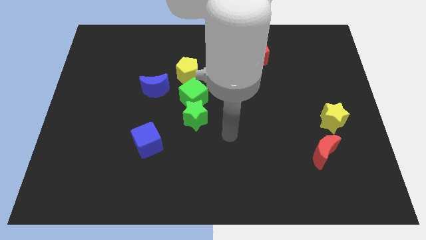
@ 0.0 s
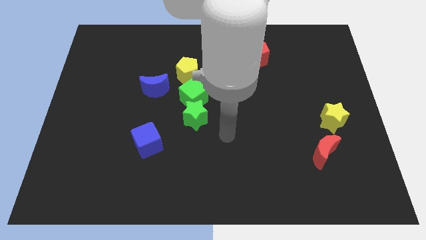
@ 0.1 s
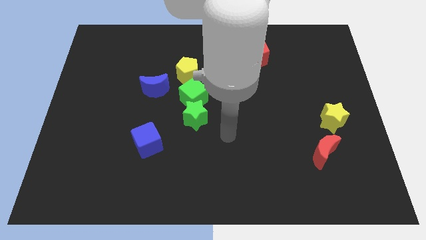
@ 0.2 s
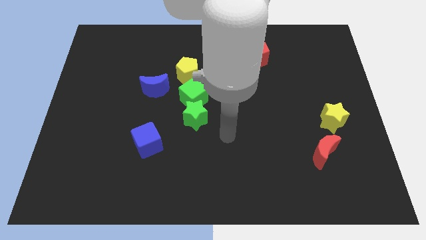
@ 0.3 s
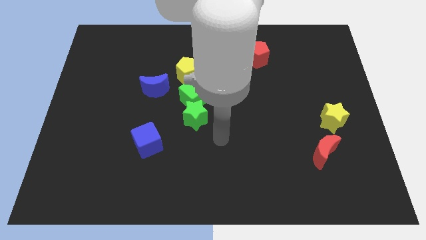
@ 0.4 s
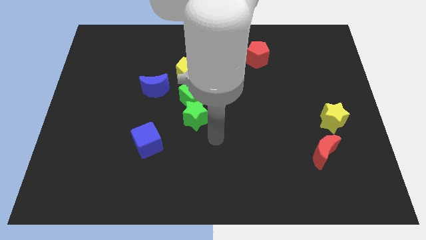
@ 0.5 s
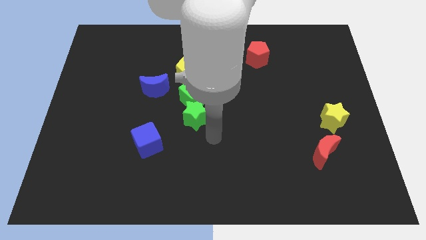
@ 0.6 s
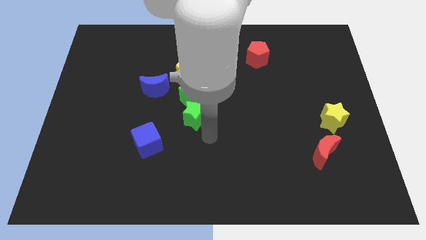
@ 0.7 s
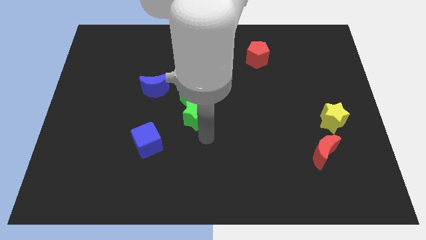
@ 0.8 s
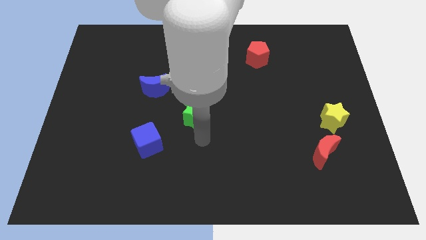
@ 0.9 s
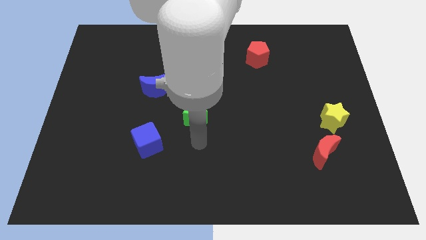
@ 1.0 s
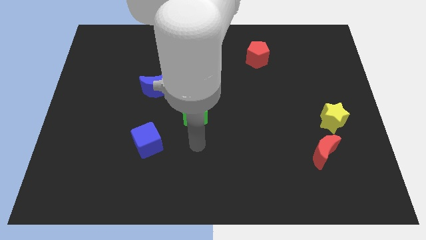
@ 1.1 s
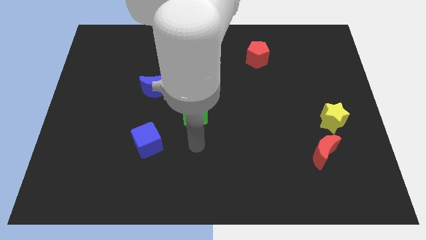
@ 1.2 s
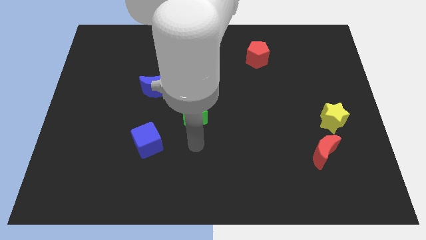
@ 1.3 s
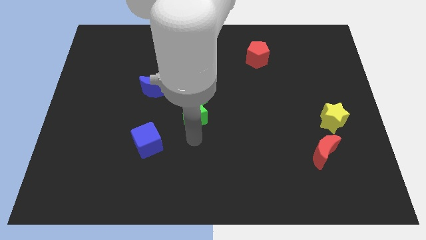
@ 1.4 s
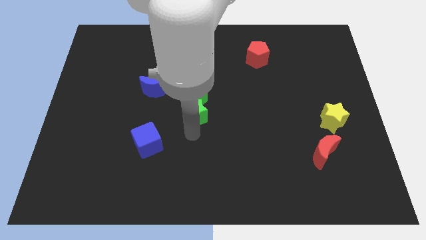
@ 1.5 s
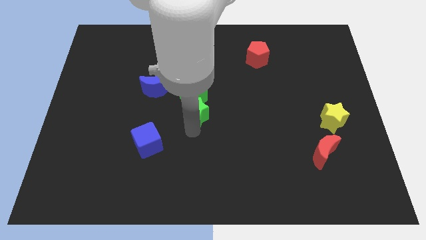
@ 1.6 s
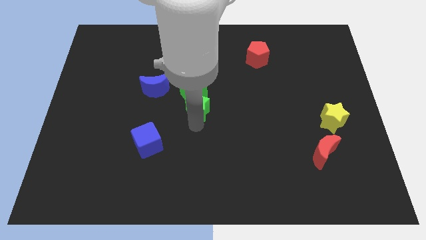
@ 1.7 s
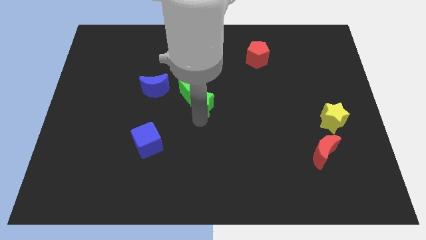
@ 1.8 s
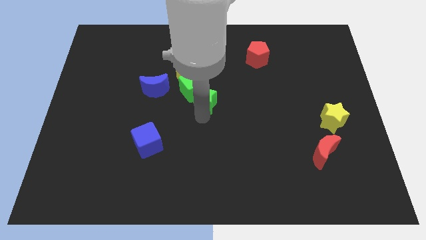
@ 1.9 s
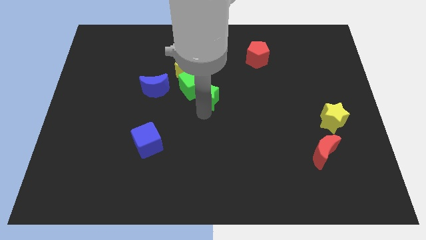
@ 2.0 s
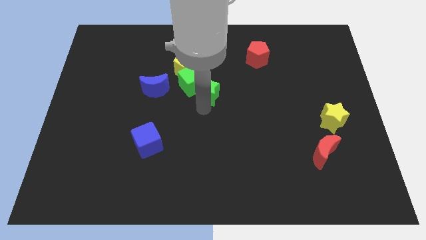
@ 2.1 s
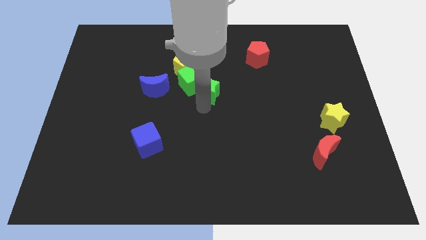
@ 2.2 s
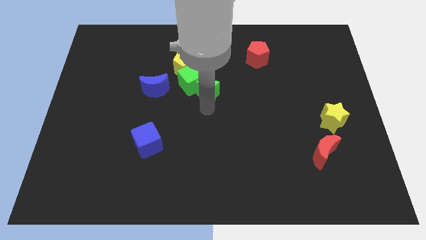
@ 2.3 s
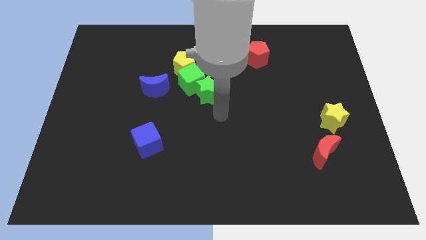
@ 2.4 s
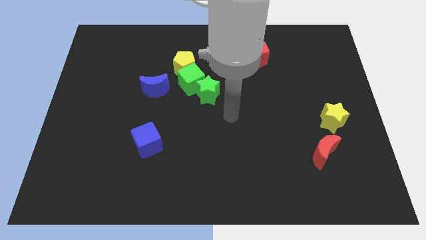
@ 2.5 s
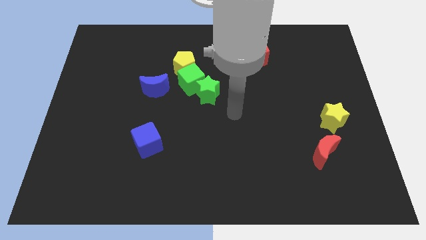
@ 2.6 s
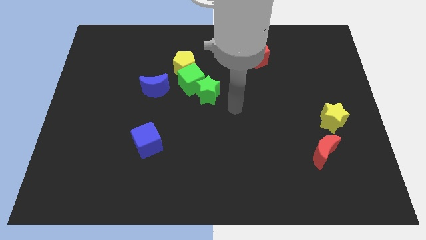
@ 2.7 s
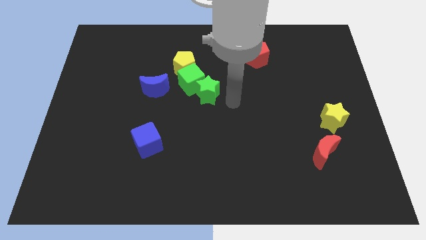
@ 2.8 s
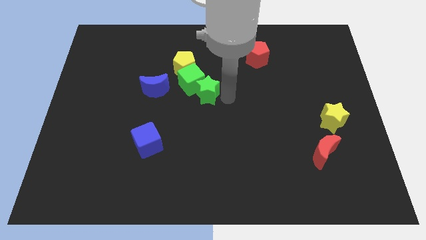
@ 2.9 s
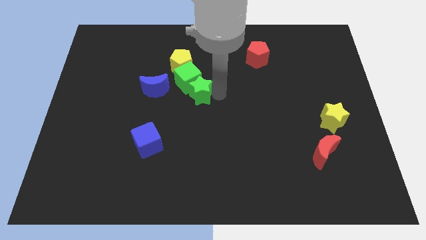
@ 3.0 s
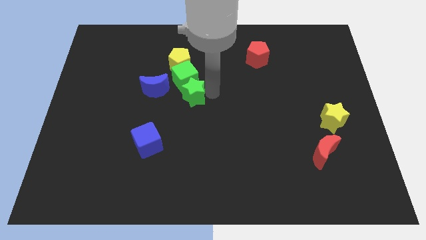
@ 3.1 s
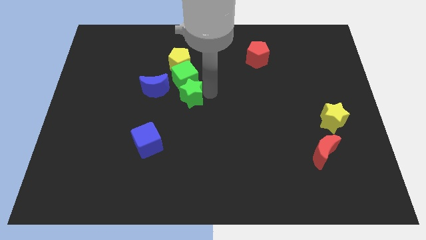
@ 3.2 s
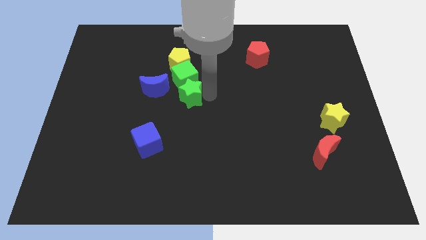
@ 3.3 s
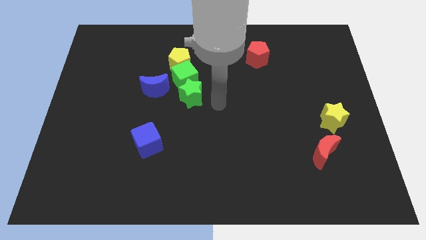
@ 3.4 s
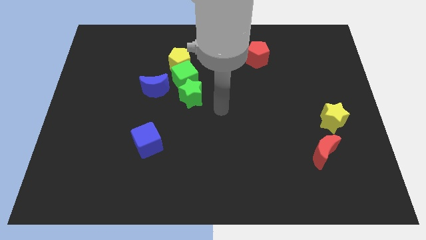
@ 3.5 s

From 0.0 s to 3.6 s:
push the green star into the green cube

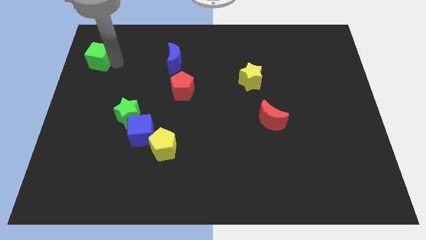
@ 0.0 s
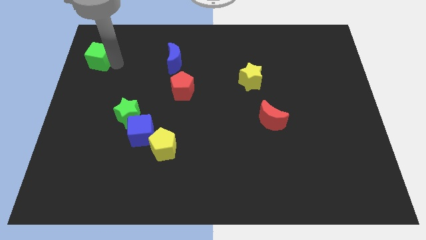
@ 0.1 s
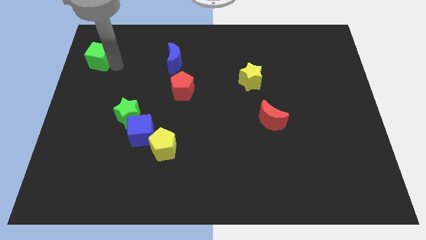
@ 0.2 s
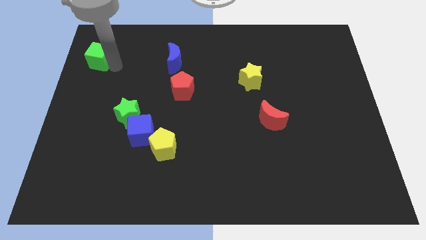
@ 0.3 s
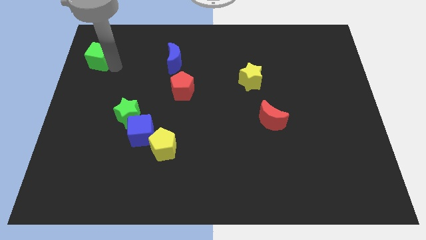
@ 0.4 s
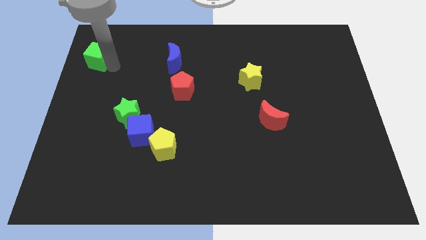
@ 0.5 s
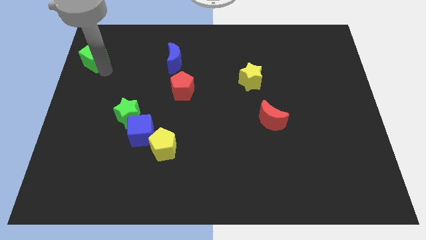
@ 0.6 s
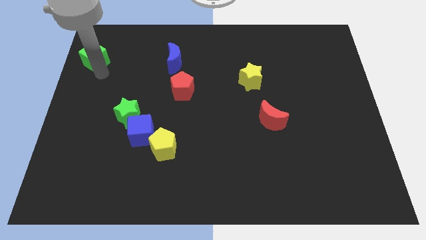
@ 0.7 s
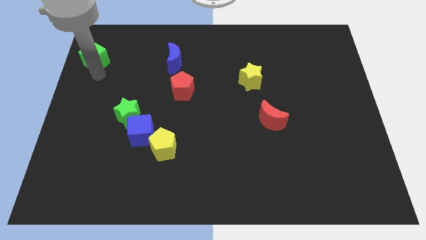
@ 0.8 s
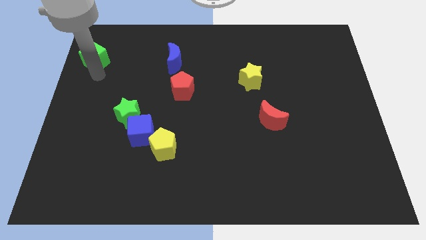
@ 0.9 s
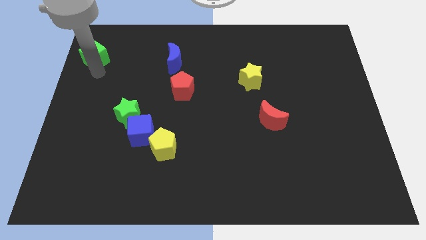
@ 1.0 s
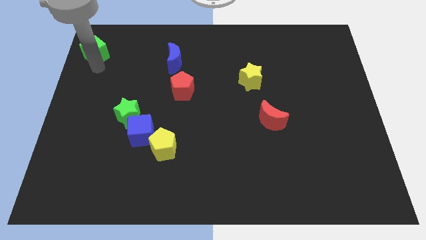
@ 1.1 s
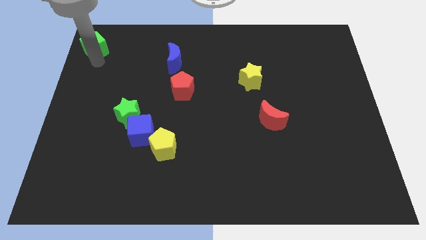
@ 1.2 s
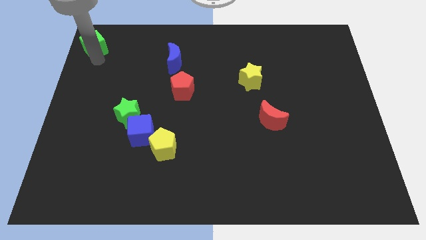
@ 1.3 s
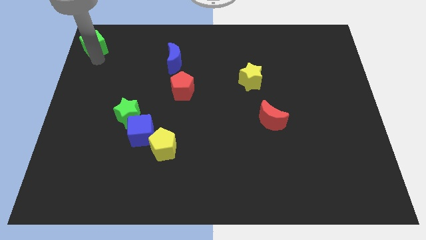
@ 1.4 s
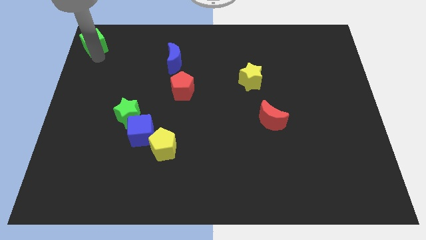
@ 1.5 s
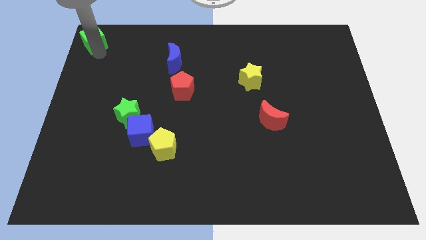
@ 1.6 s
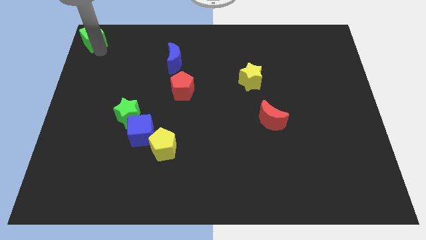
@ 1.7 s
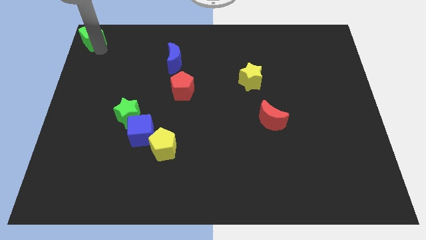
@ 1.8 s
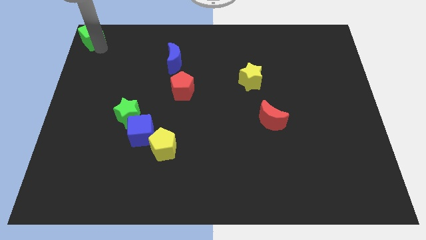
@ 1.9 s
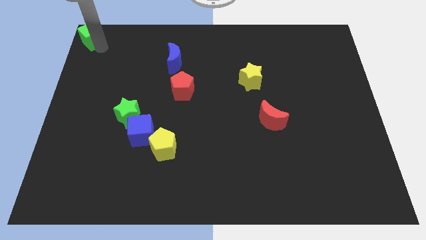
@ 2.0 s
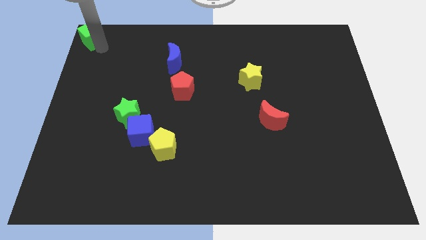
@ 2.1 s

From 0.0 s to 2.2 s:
push green cube on the top left corner

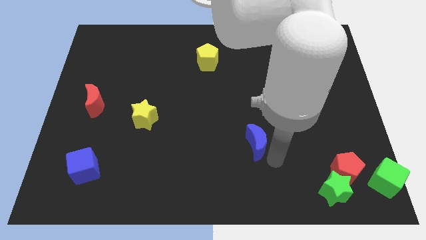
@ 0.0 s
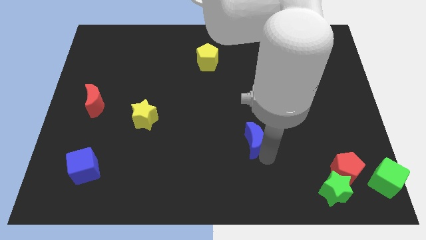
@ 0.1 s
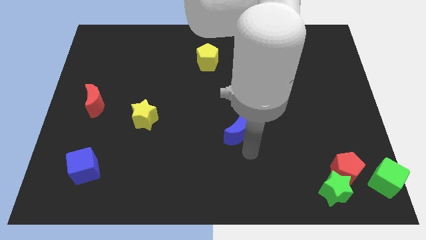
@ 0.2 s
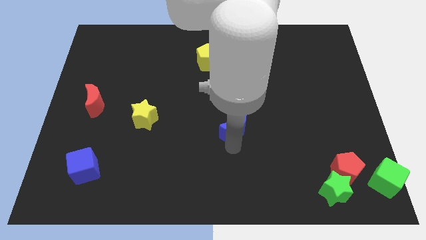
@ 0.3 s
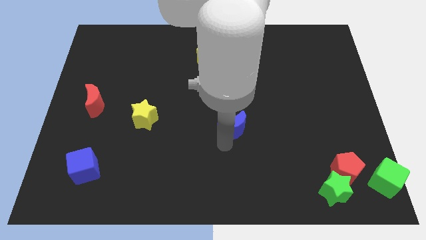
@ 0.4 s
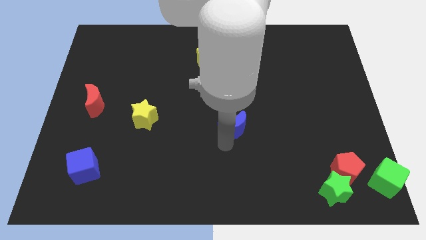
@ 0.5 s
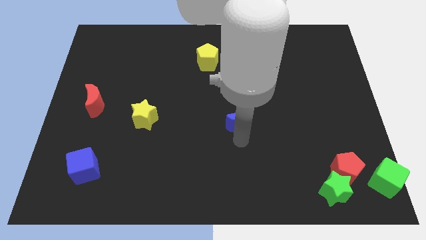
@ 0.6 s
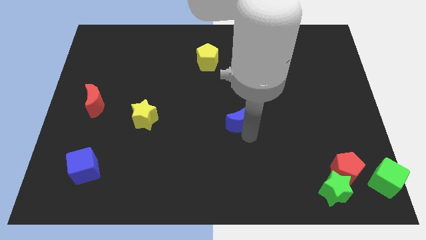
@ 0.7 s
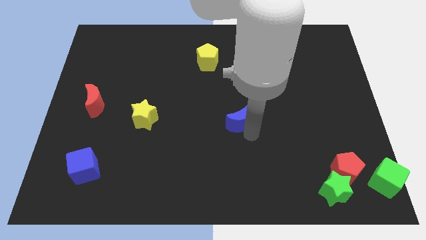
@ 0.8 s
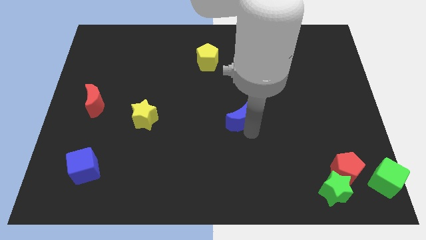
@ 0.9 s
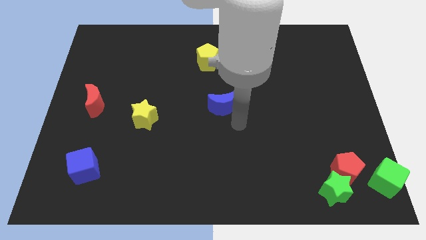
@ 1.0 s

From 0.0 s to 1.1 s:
place the blue crescent vertically below the yellow pentagon

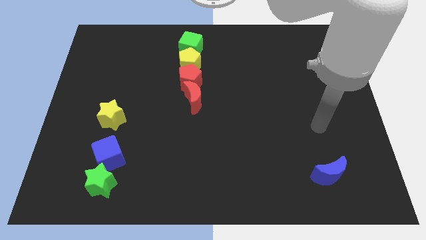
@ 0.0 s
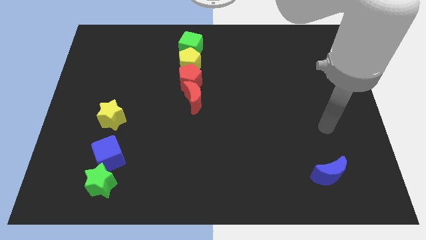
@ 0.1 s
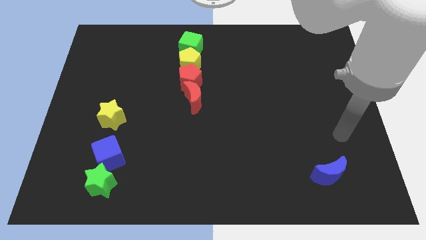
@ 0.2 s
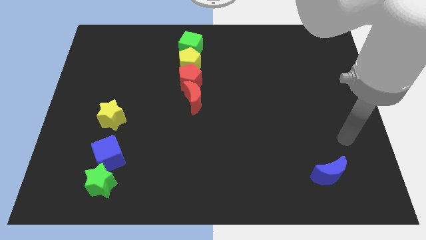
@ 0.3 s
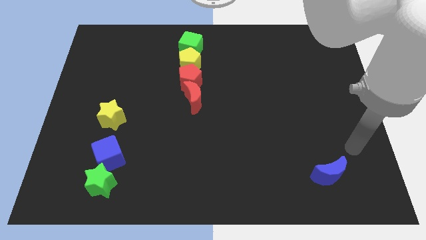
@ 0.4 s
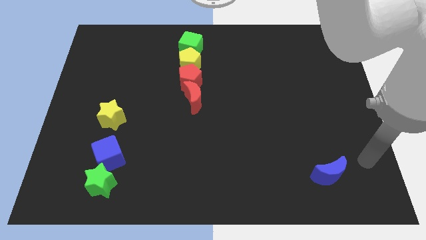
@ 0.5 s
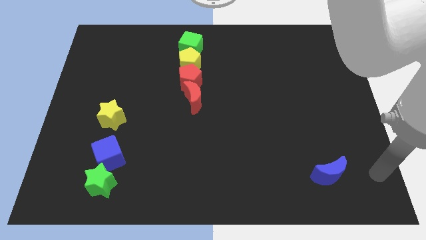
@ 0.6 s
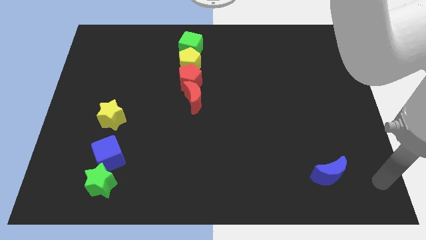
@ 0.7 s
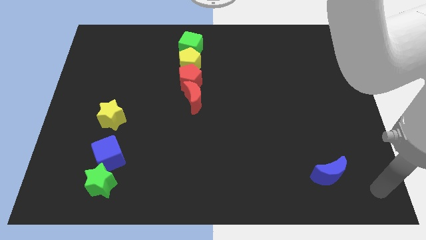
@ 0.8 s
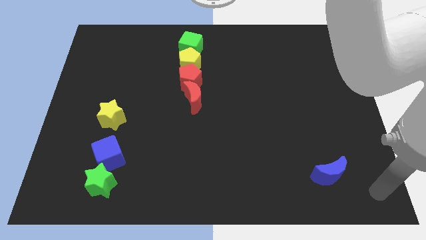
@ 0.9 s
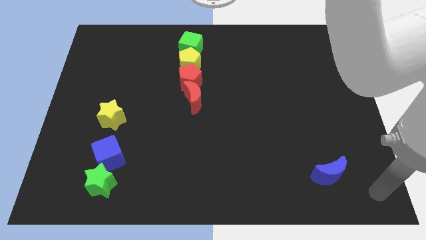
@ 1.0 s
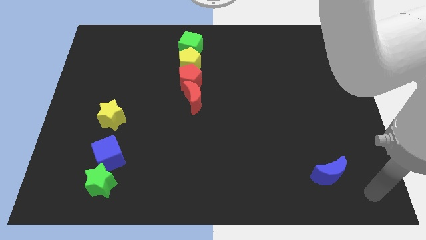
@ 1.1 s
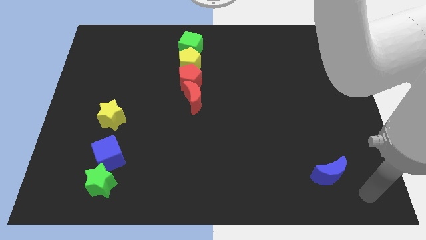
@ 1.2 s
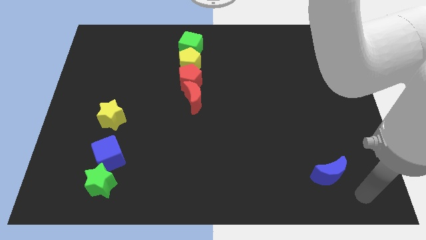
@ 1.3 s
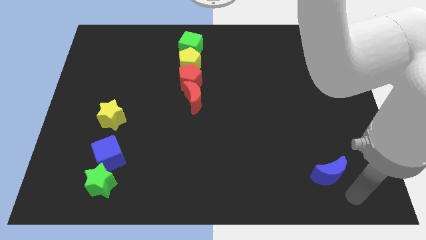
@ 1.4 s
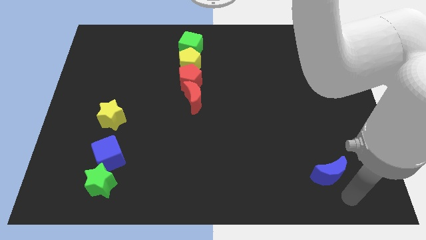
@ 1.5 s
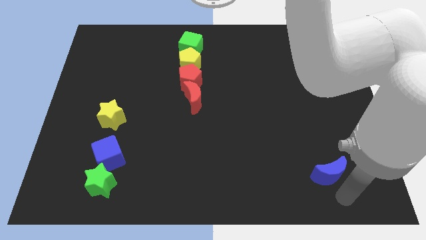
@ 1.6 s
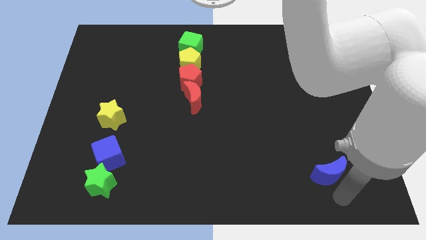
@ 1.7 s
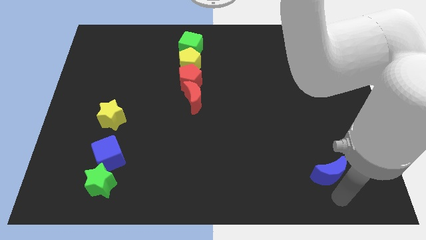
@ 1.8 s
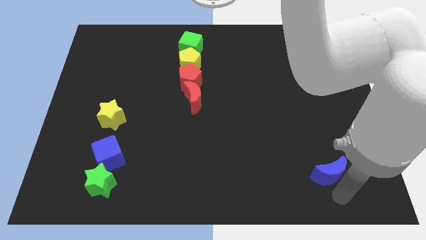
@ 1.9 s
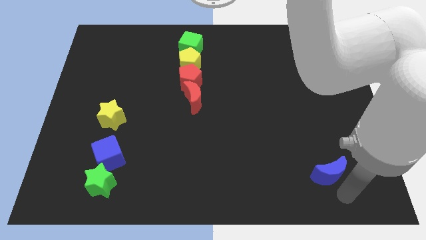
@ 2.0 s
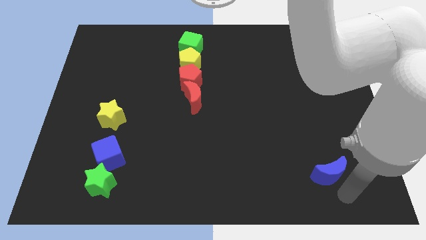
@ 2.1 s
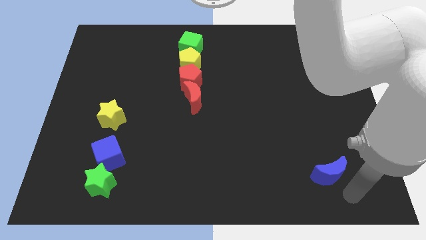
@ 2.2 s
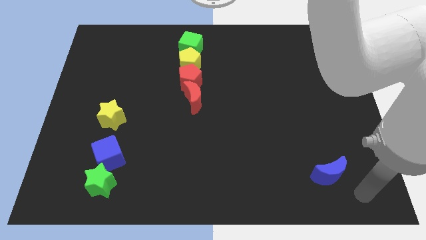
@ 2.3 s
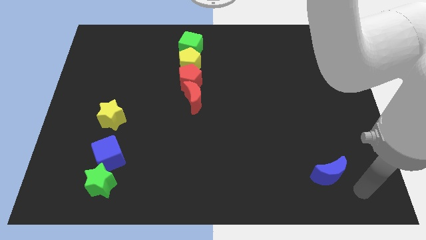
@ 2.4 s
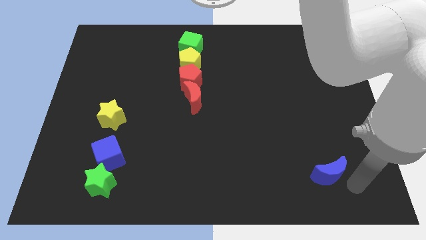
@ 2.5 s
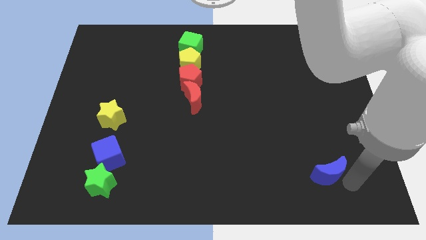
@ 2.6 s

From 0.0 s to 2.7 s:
place the arm near the blue moon
